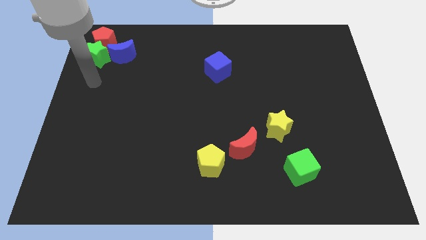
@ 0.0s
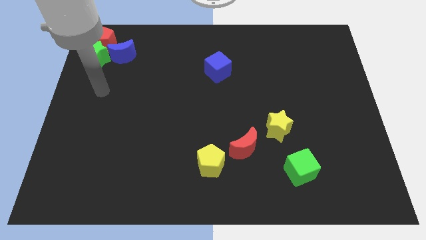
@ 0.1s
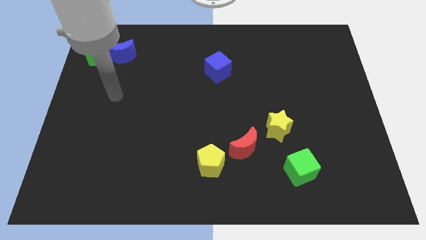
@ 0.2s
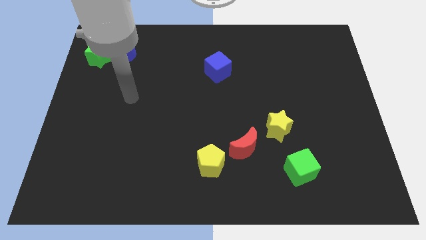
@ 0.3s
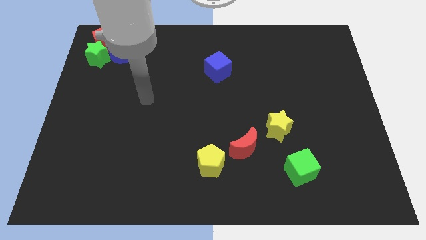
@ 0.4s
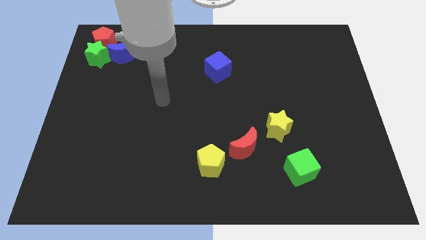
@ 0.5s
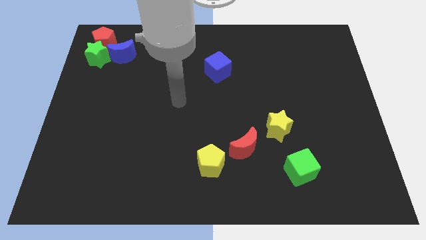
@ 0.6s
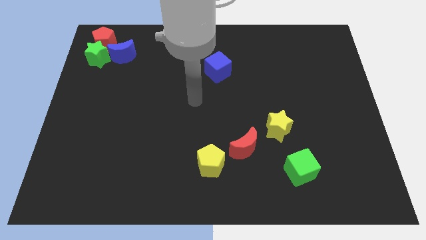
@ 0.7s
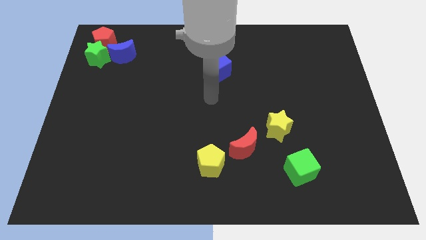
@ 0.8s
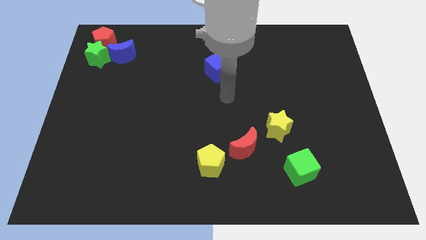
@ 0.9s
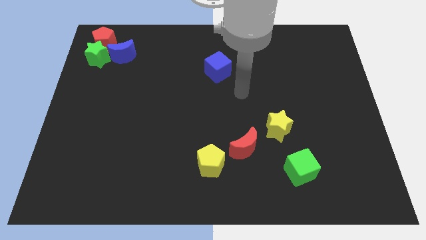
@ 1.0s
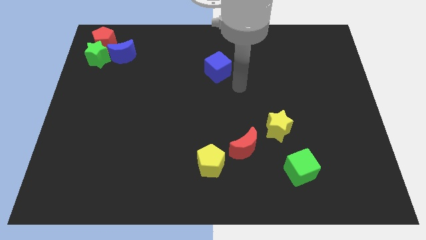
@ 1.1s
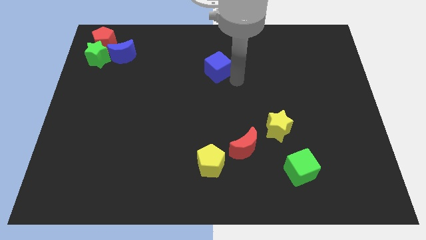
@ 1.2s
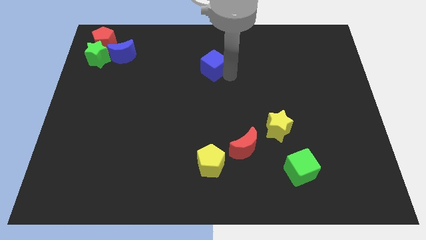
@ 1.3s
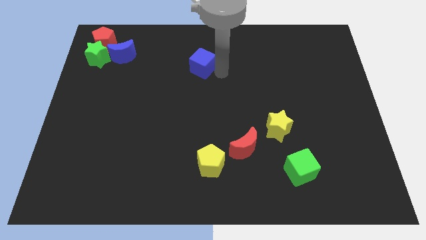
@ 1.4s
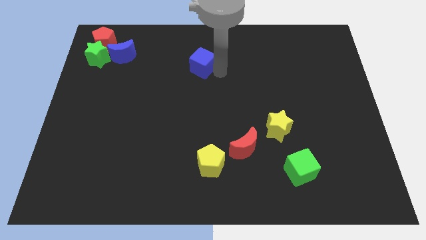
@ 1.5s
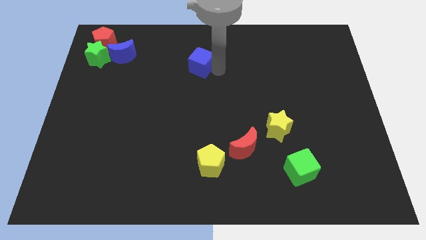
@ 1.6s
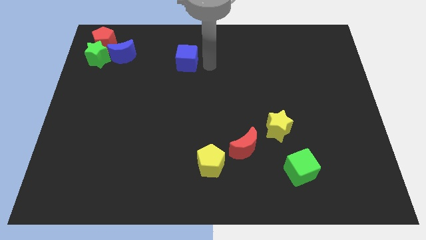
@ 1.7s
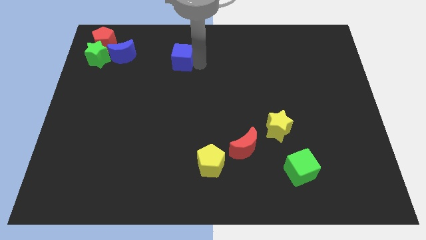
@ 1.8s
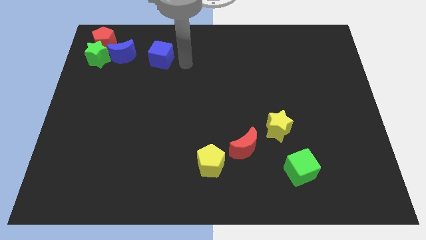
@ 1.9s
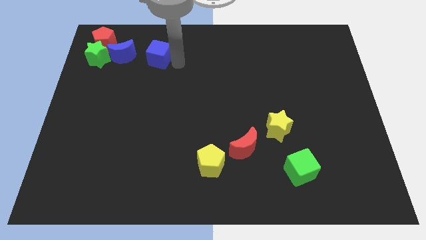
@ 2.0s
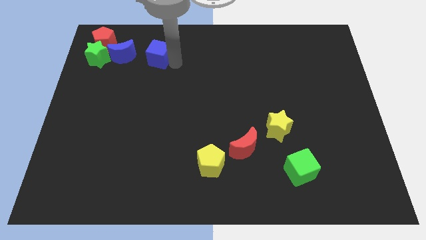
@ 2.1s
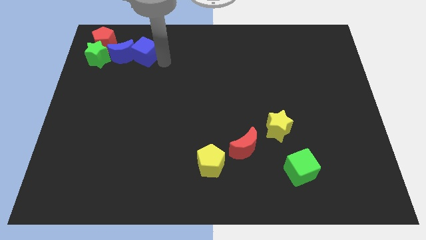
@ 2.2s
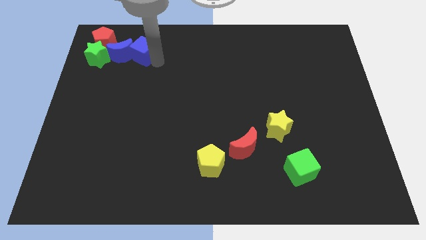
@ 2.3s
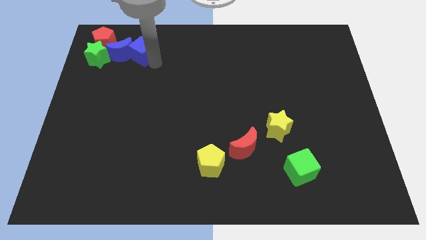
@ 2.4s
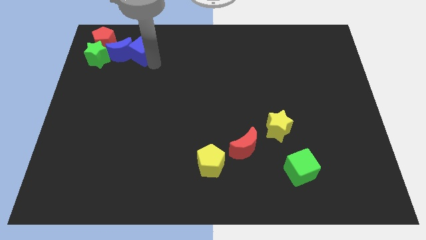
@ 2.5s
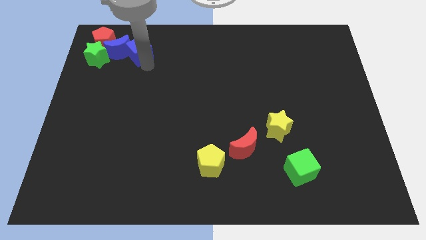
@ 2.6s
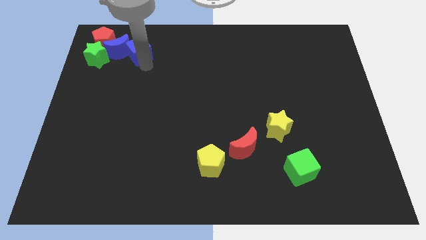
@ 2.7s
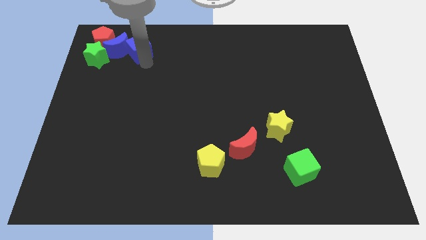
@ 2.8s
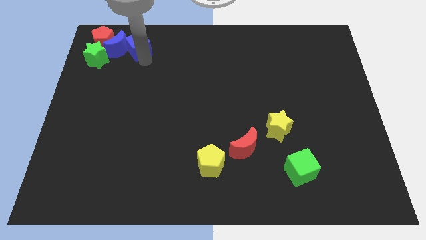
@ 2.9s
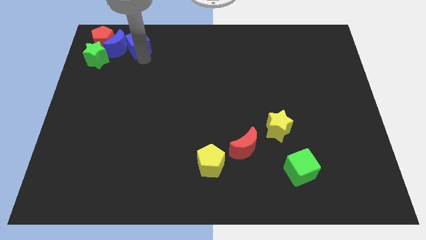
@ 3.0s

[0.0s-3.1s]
push the blue cube into the blue crescent

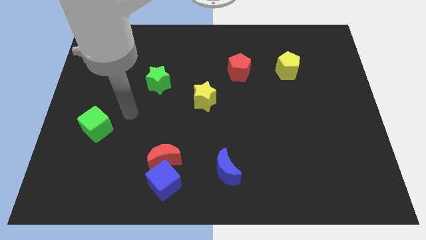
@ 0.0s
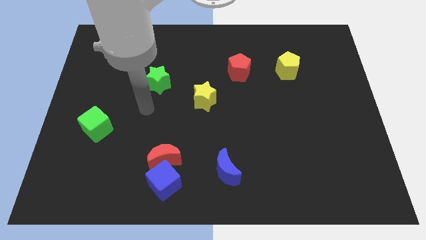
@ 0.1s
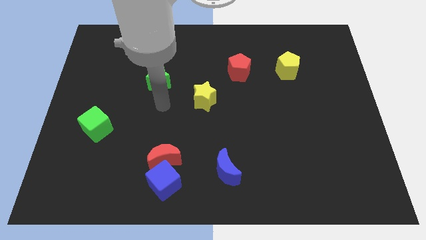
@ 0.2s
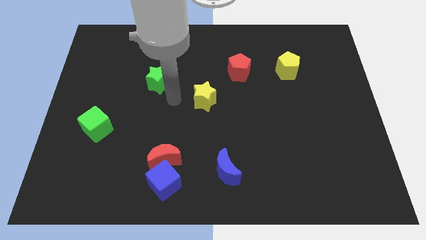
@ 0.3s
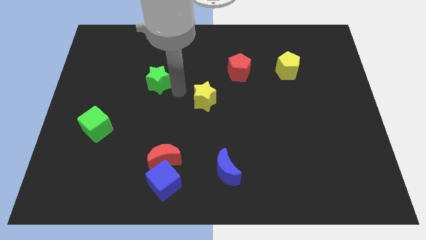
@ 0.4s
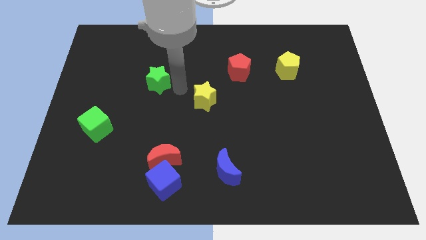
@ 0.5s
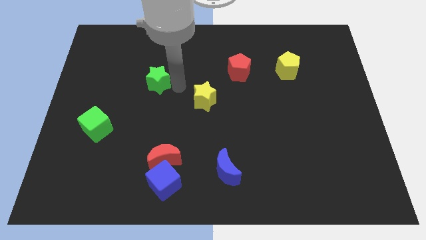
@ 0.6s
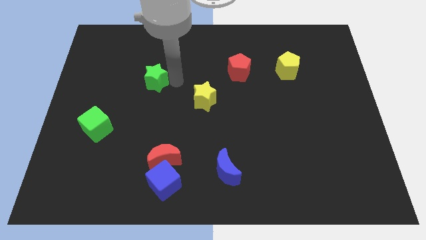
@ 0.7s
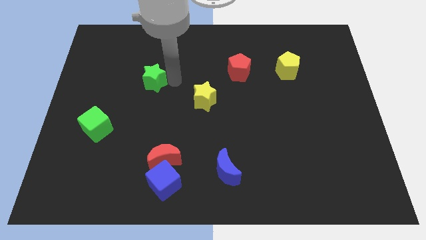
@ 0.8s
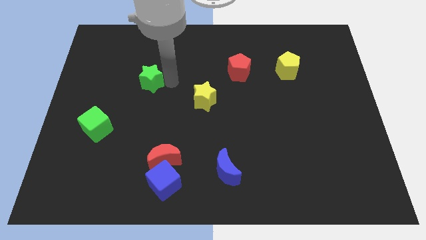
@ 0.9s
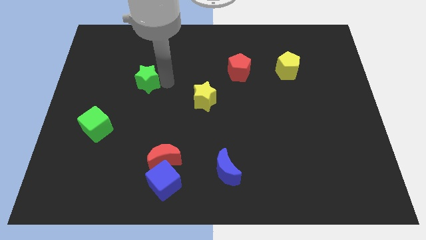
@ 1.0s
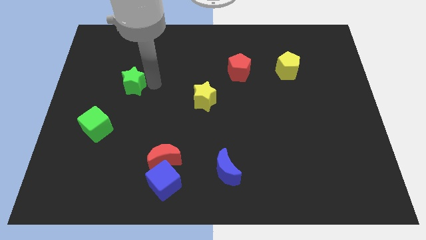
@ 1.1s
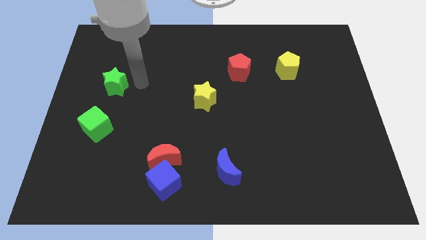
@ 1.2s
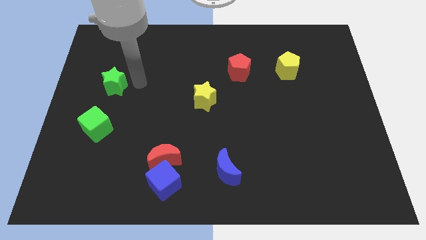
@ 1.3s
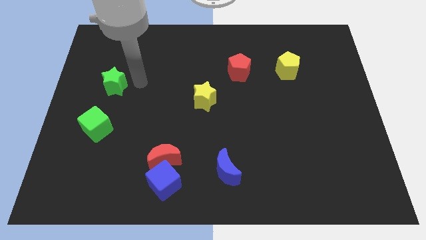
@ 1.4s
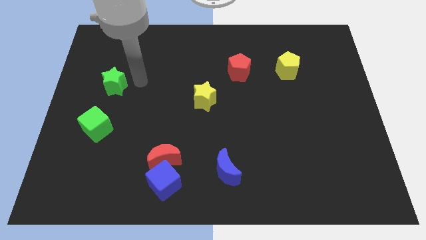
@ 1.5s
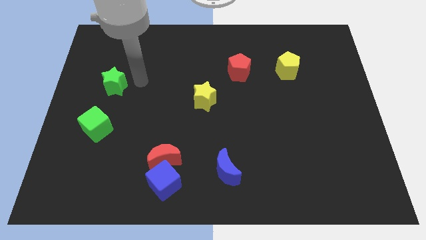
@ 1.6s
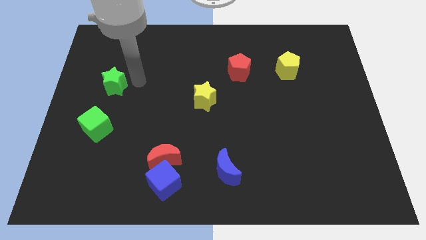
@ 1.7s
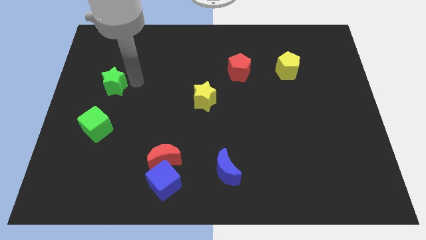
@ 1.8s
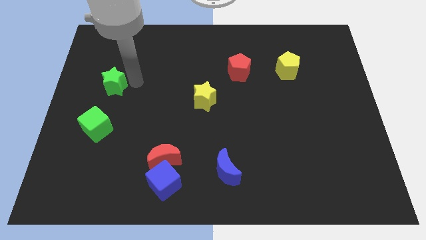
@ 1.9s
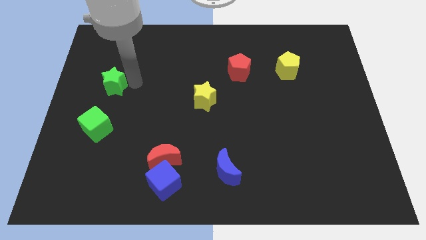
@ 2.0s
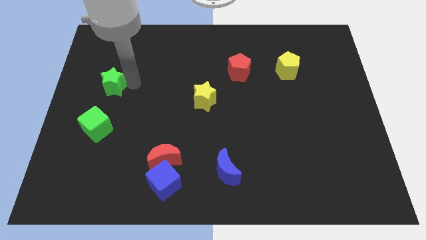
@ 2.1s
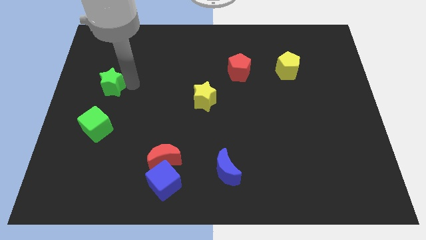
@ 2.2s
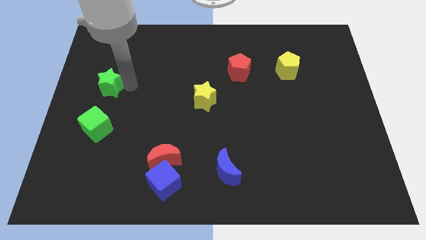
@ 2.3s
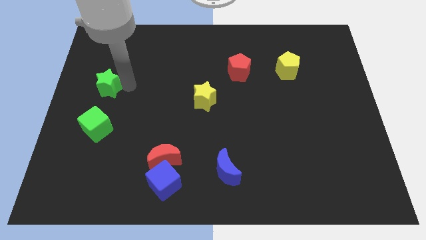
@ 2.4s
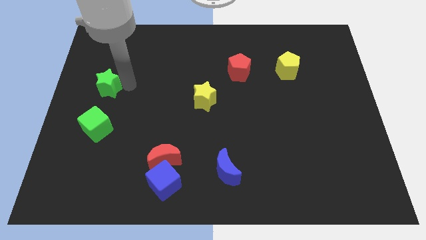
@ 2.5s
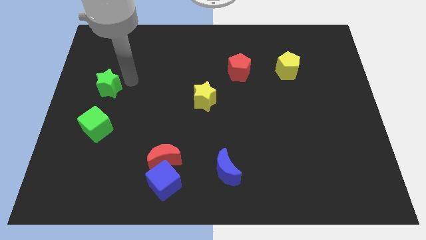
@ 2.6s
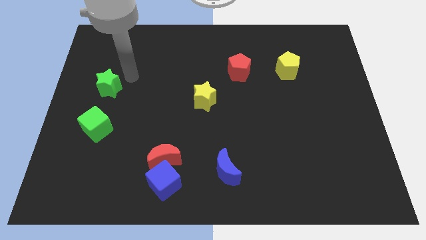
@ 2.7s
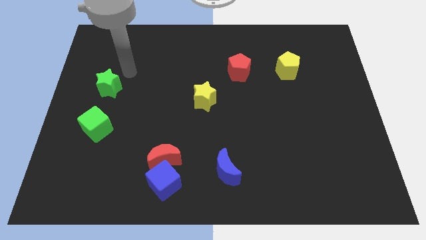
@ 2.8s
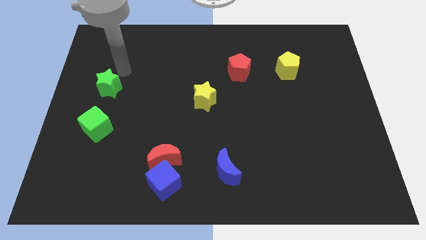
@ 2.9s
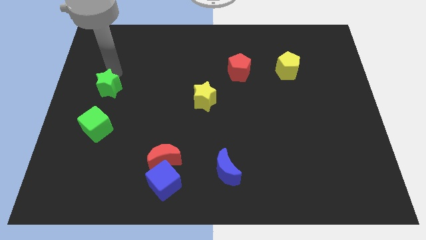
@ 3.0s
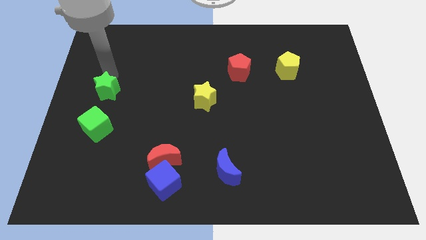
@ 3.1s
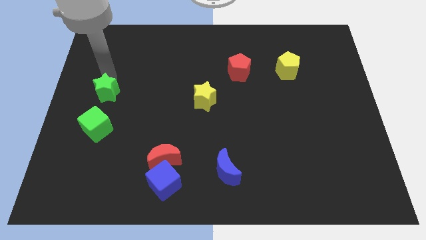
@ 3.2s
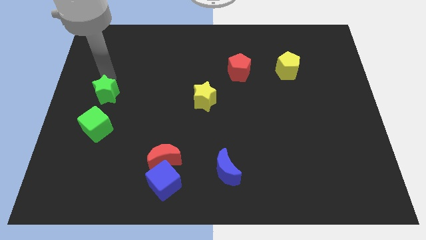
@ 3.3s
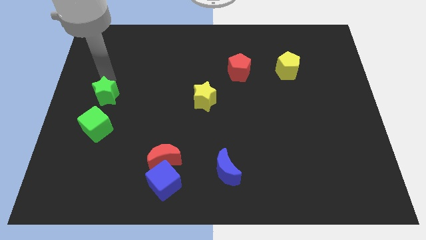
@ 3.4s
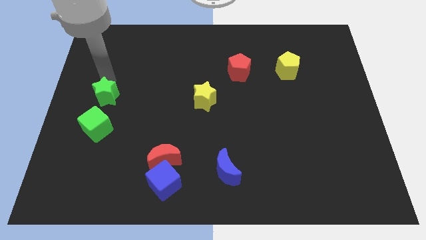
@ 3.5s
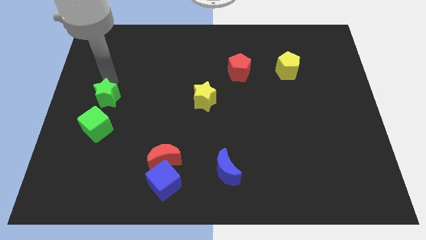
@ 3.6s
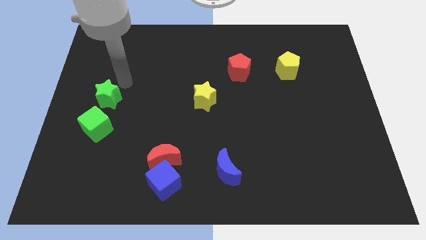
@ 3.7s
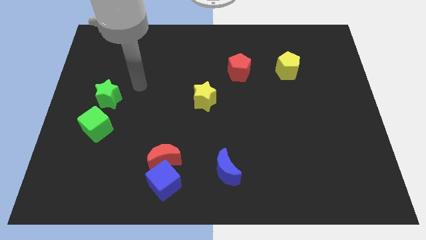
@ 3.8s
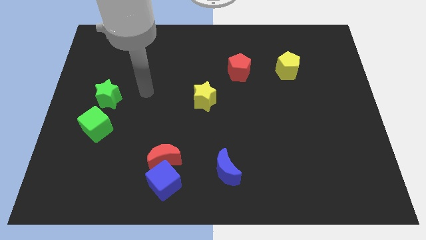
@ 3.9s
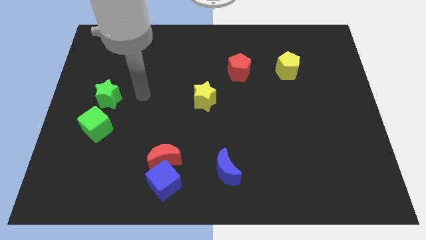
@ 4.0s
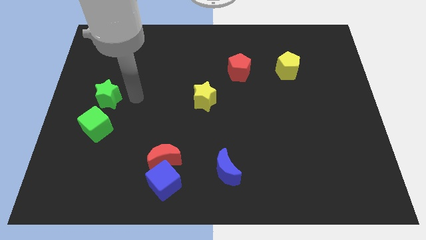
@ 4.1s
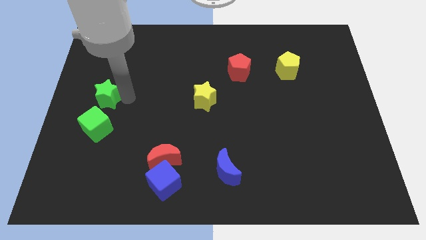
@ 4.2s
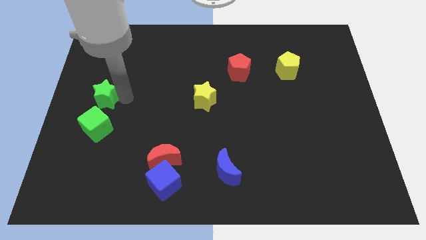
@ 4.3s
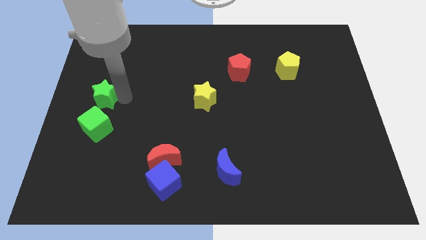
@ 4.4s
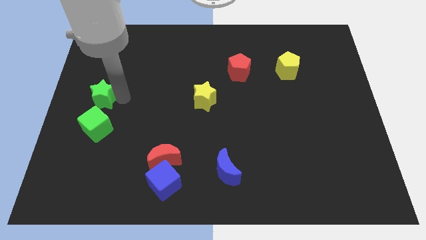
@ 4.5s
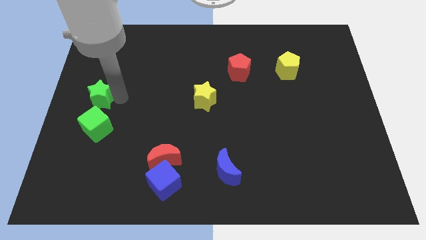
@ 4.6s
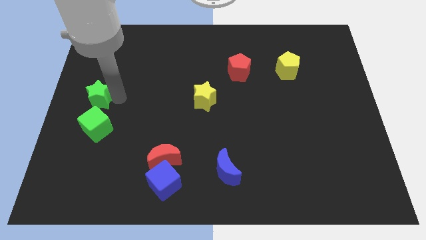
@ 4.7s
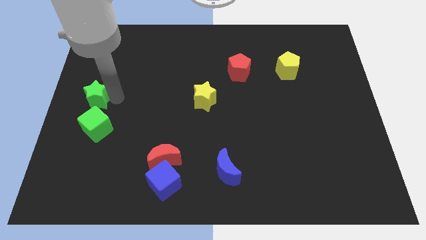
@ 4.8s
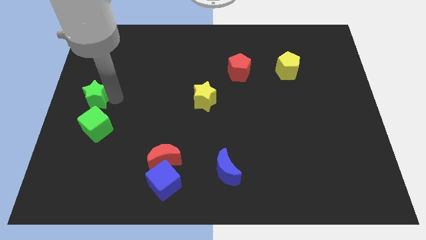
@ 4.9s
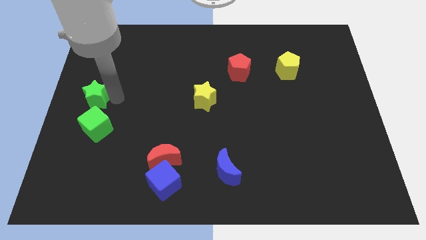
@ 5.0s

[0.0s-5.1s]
place the green star at the green cube

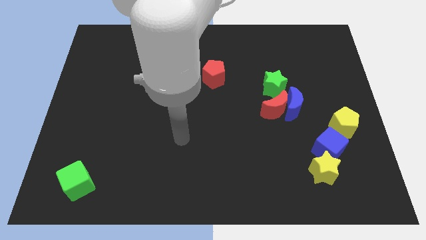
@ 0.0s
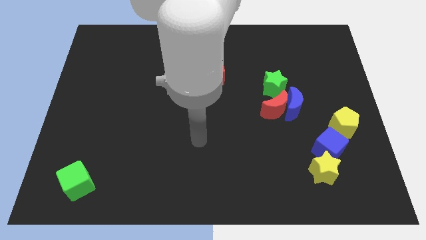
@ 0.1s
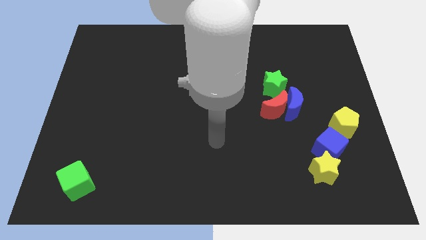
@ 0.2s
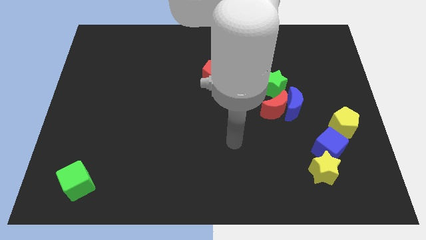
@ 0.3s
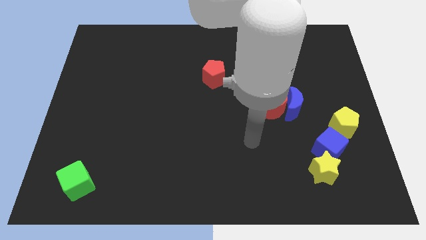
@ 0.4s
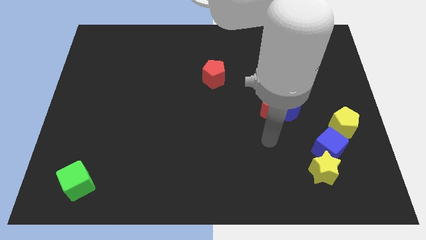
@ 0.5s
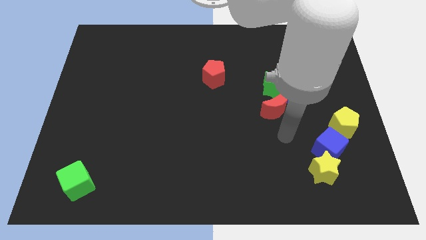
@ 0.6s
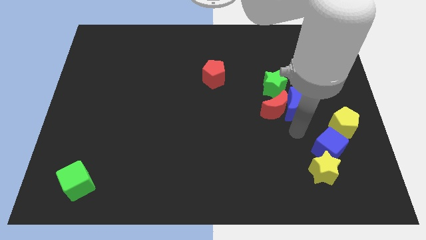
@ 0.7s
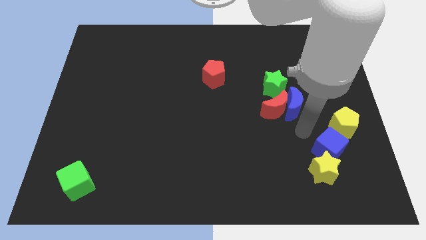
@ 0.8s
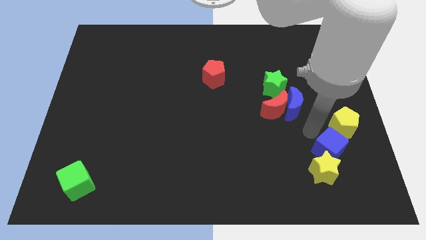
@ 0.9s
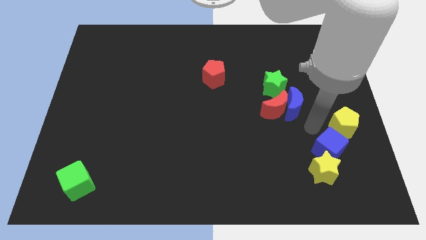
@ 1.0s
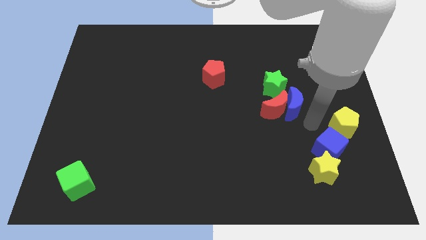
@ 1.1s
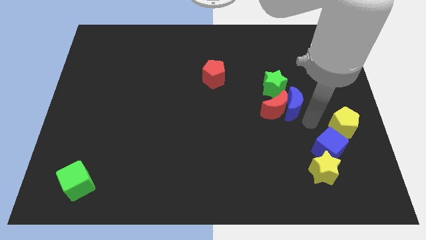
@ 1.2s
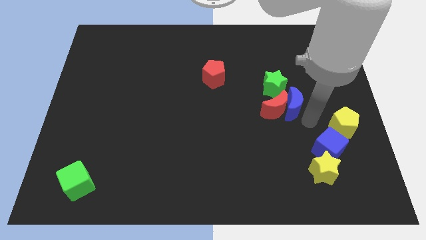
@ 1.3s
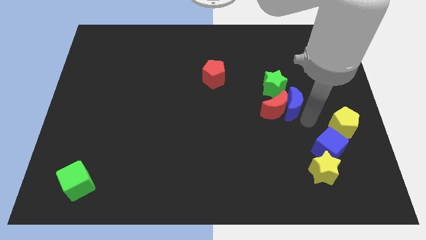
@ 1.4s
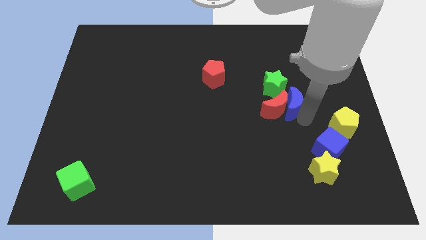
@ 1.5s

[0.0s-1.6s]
move the arm towards the blue half moon
